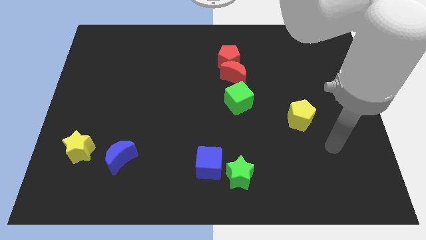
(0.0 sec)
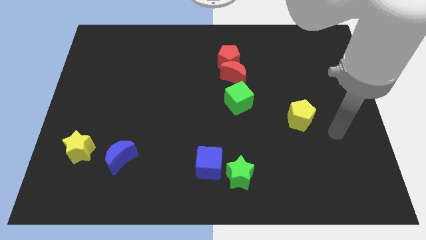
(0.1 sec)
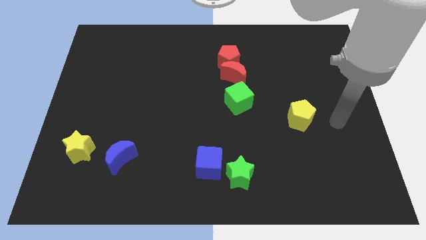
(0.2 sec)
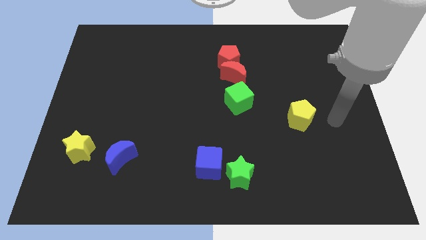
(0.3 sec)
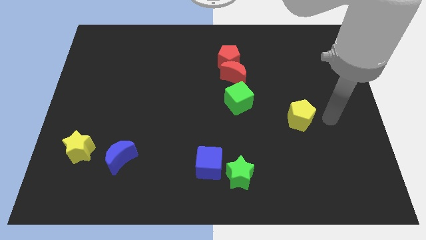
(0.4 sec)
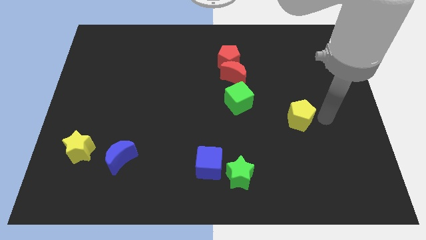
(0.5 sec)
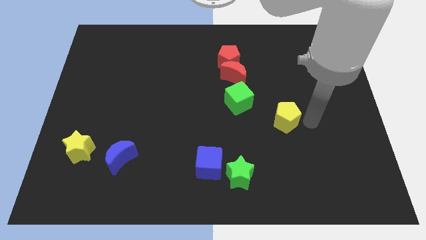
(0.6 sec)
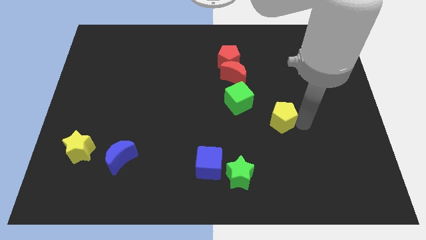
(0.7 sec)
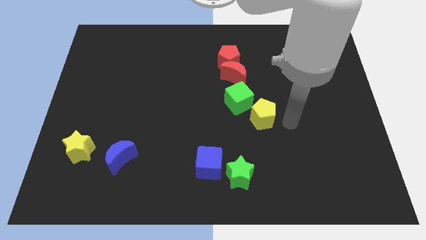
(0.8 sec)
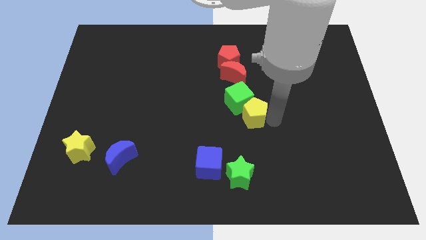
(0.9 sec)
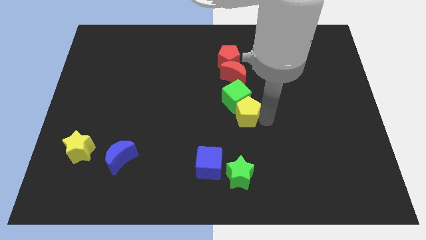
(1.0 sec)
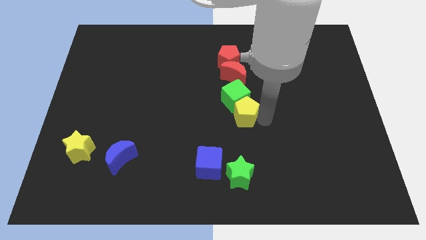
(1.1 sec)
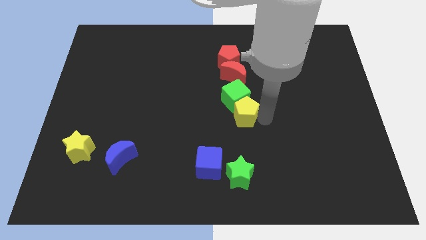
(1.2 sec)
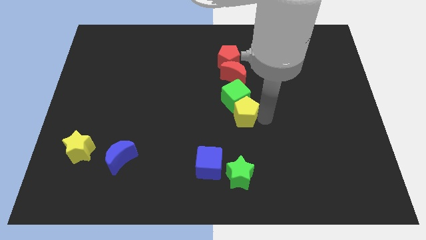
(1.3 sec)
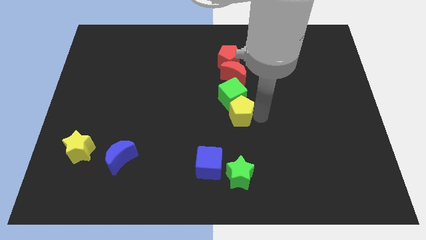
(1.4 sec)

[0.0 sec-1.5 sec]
push the yellow pentagon into the green cube

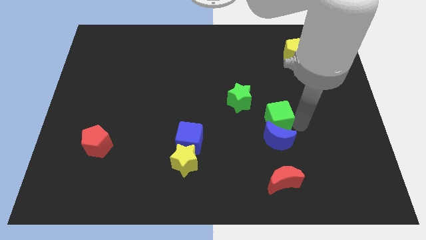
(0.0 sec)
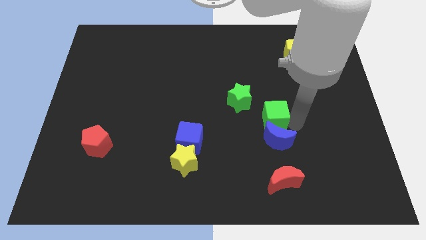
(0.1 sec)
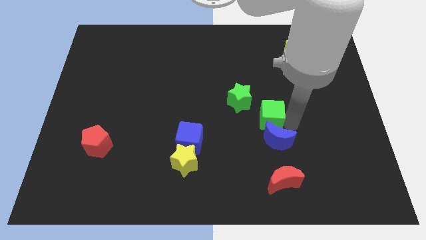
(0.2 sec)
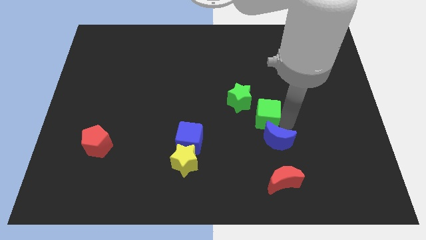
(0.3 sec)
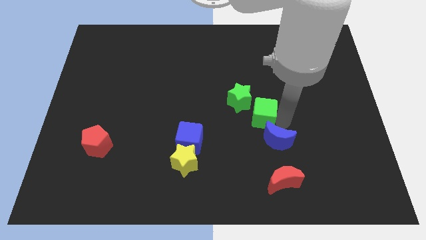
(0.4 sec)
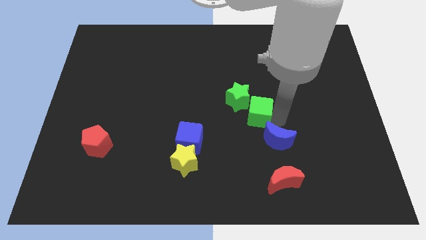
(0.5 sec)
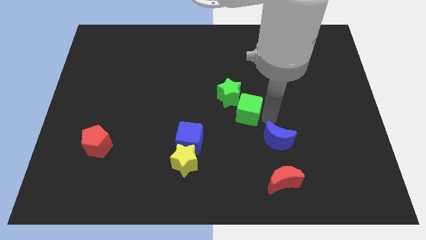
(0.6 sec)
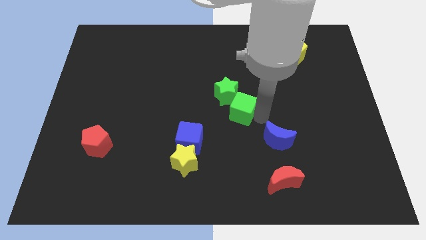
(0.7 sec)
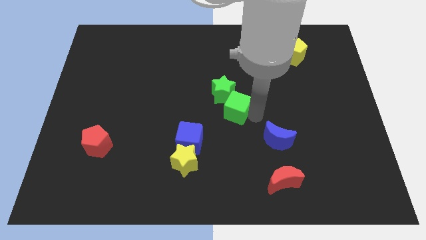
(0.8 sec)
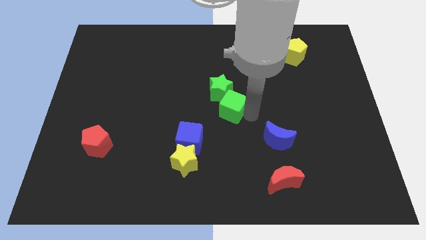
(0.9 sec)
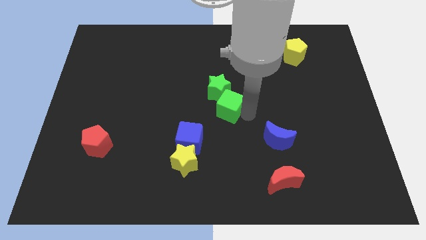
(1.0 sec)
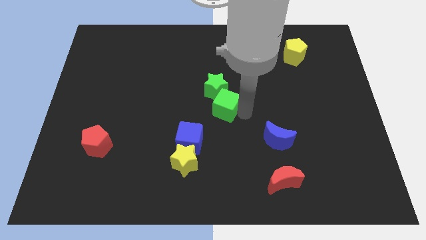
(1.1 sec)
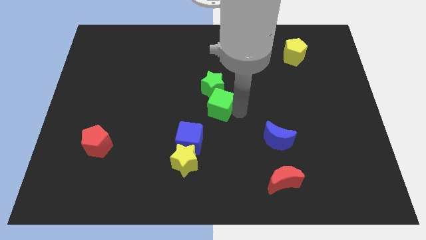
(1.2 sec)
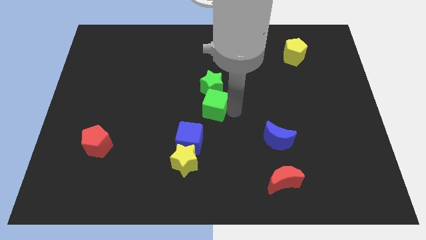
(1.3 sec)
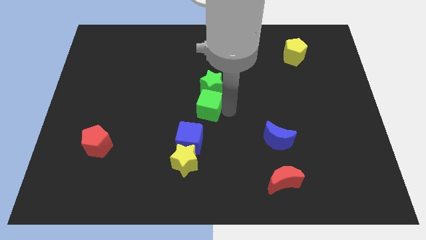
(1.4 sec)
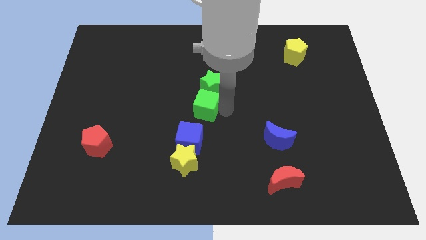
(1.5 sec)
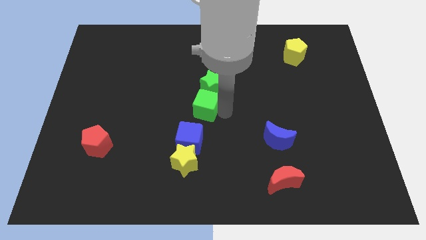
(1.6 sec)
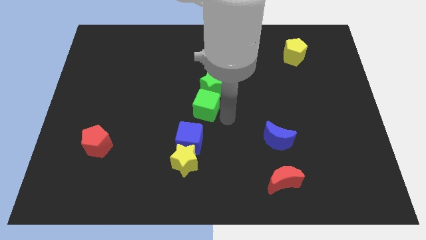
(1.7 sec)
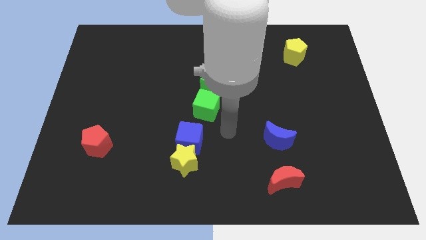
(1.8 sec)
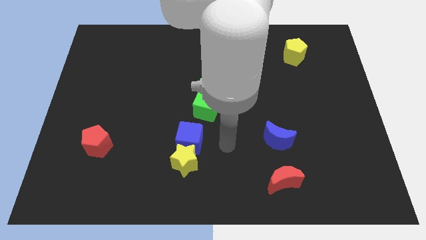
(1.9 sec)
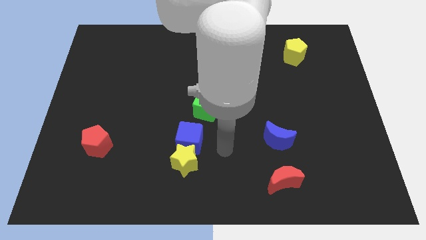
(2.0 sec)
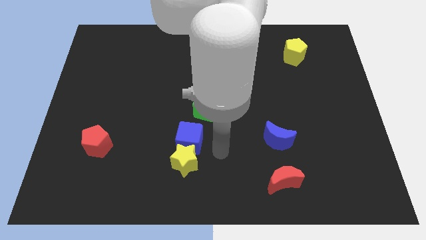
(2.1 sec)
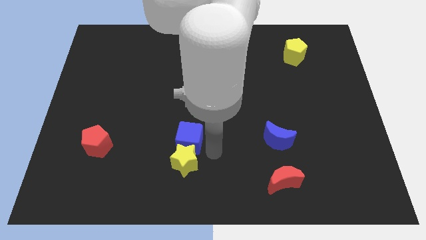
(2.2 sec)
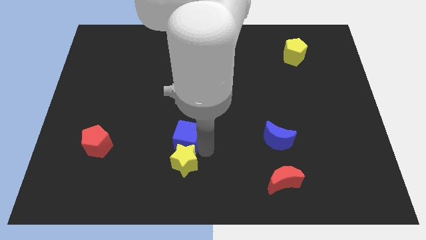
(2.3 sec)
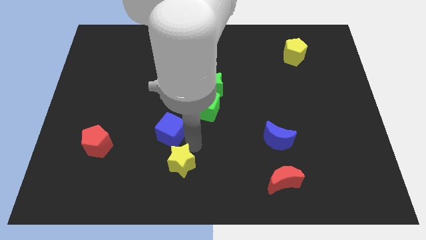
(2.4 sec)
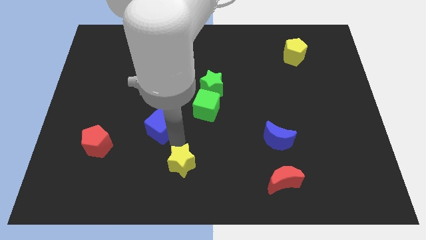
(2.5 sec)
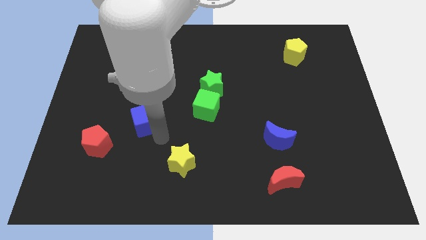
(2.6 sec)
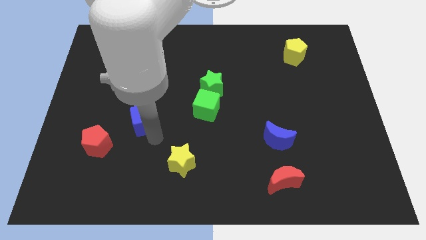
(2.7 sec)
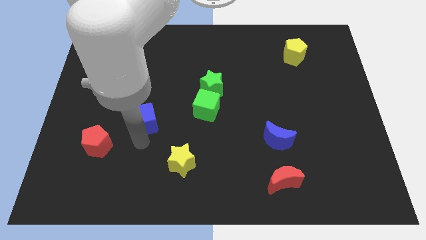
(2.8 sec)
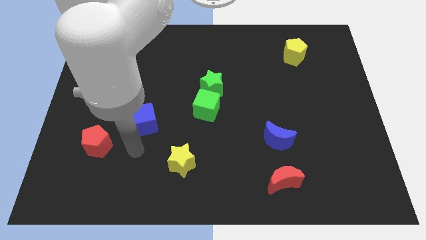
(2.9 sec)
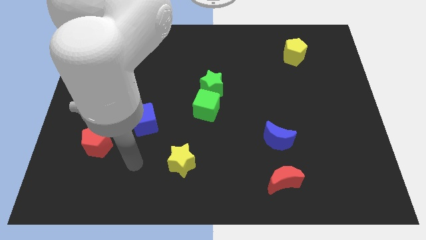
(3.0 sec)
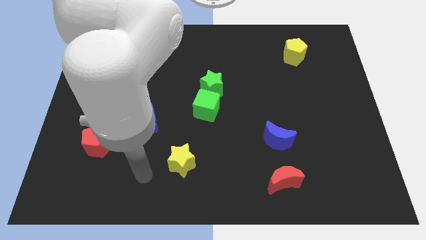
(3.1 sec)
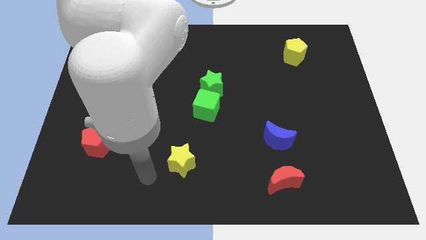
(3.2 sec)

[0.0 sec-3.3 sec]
put the group of green blocks and blue cube in a diagonal line at the top right of the red pentagon

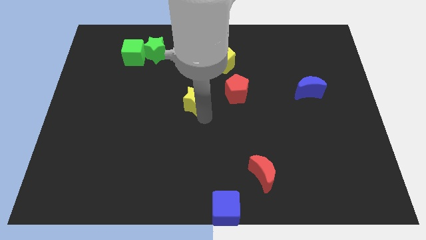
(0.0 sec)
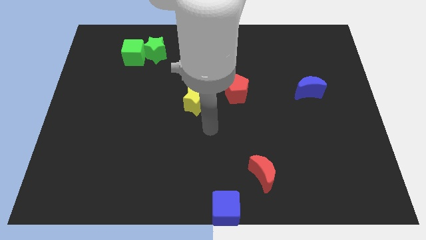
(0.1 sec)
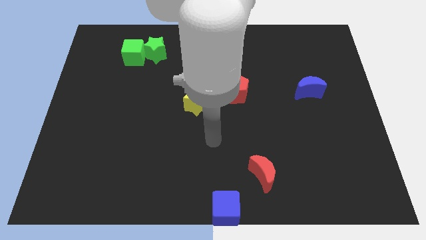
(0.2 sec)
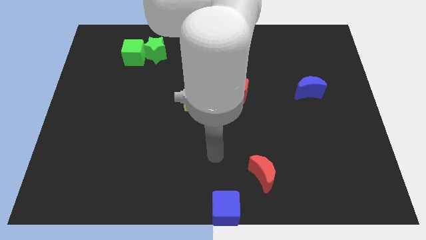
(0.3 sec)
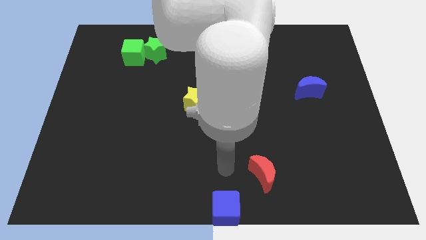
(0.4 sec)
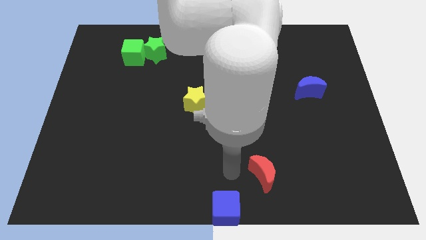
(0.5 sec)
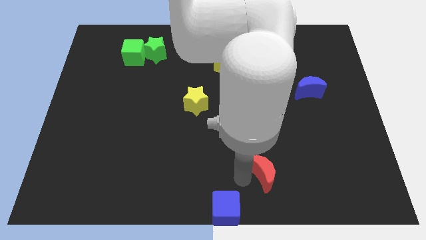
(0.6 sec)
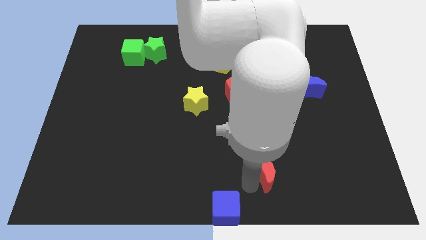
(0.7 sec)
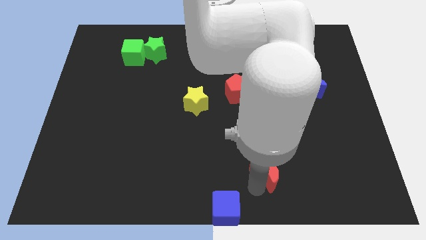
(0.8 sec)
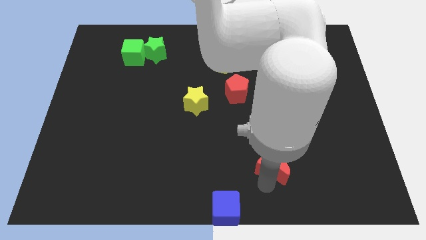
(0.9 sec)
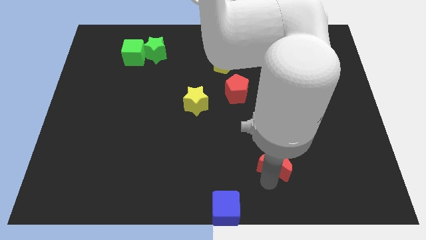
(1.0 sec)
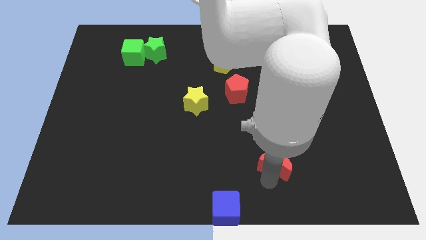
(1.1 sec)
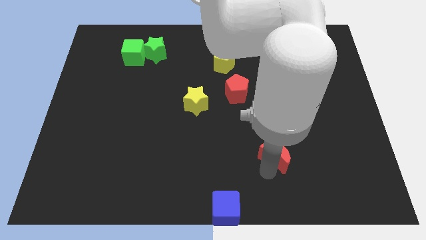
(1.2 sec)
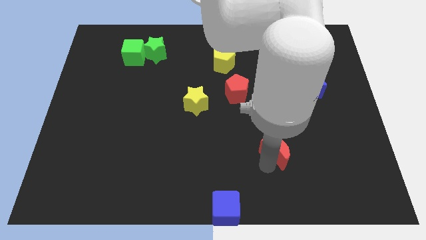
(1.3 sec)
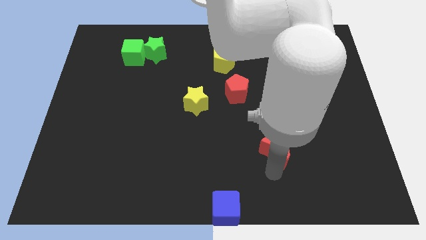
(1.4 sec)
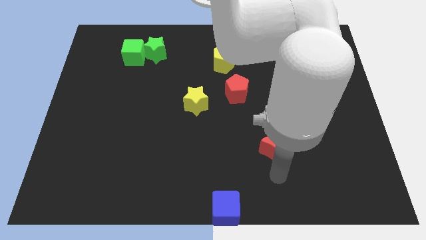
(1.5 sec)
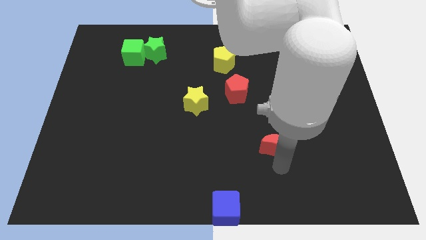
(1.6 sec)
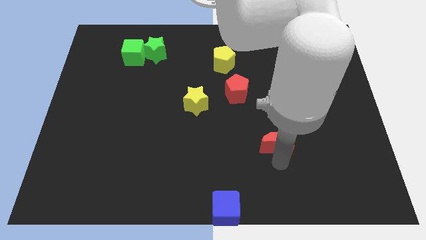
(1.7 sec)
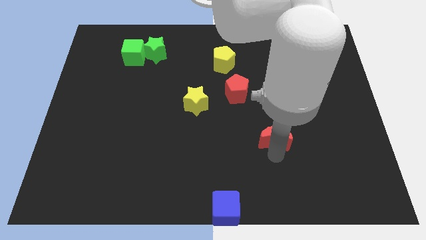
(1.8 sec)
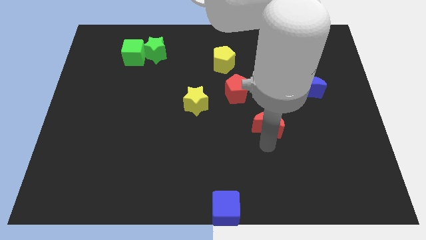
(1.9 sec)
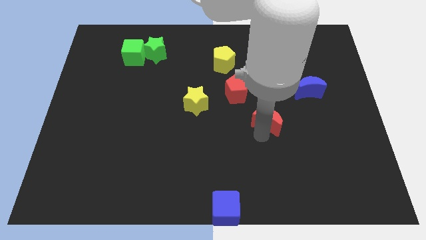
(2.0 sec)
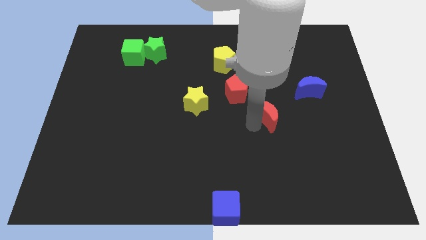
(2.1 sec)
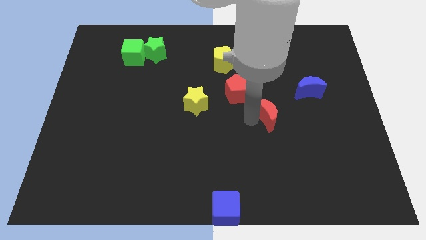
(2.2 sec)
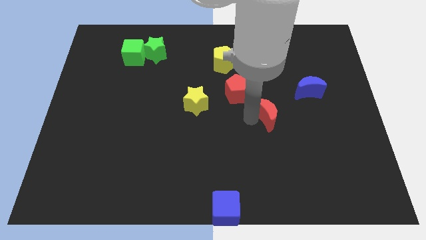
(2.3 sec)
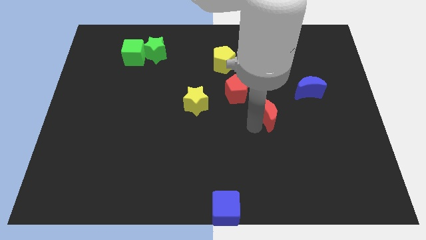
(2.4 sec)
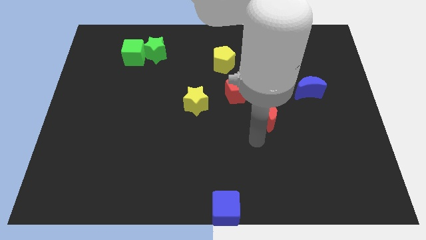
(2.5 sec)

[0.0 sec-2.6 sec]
push the red moon to the center

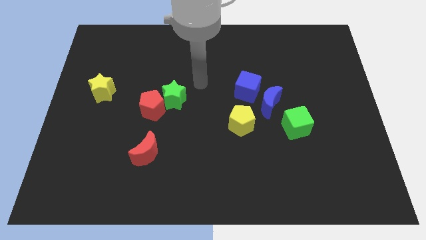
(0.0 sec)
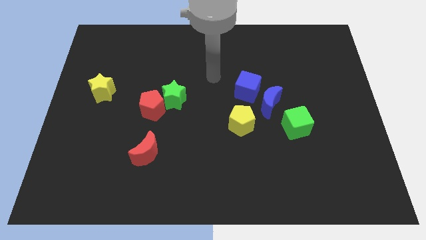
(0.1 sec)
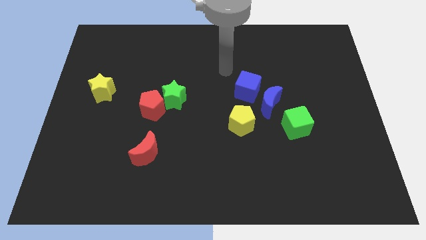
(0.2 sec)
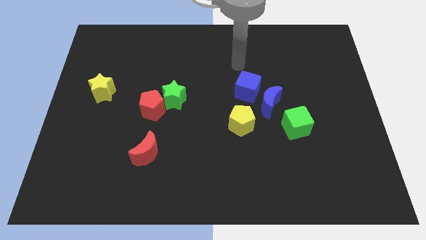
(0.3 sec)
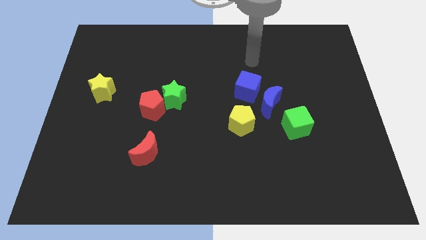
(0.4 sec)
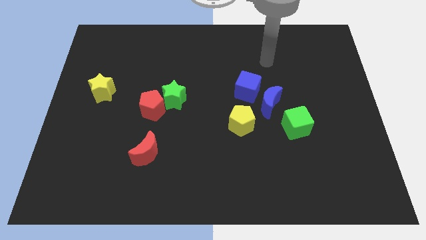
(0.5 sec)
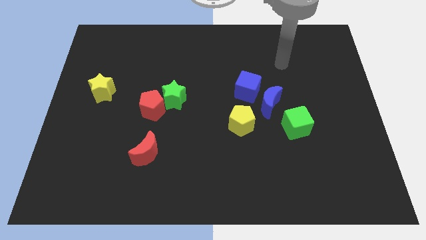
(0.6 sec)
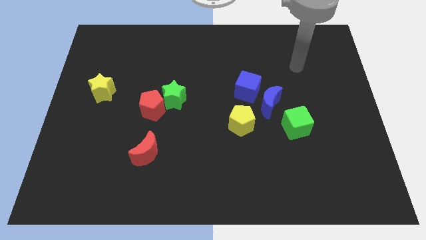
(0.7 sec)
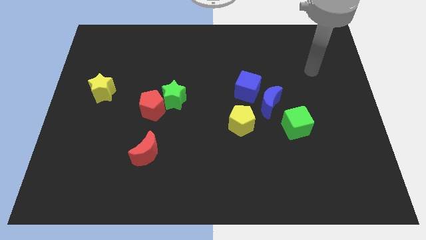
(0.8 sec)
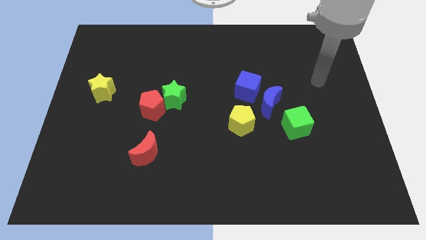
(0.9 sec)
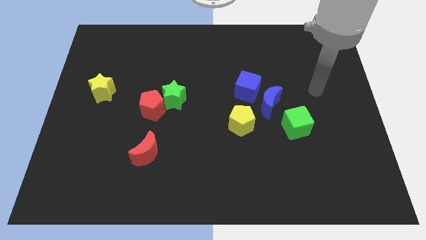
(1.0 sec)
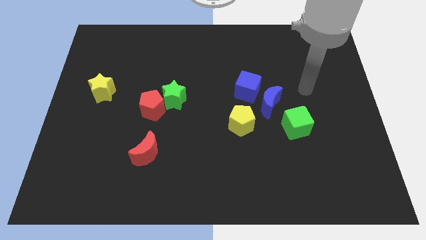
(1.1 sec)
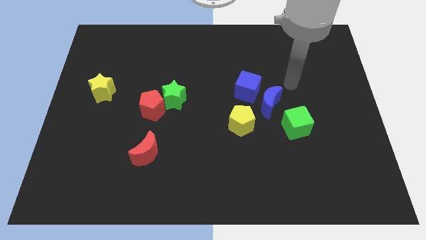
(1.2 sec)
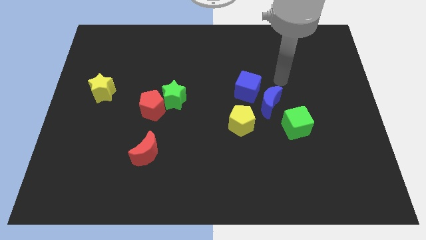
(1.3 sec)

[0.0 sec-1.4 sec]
place your arm at the top of the blue crescent
